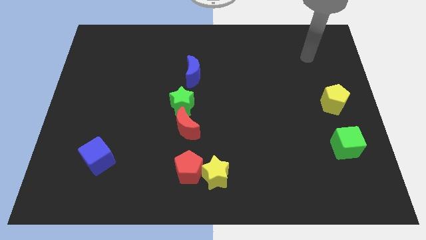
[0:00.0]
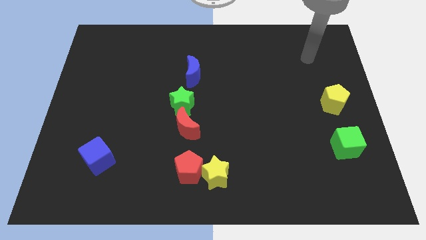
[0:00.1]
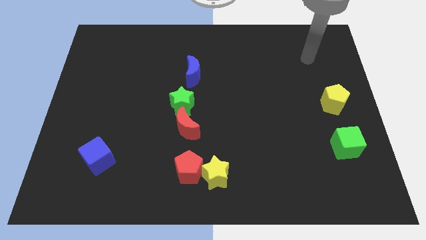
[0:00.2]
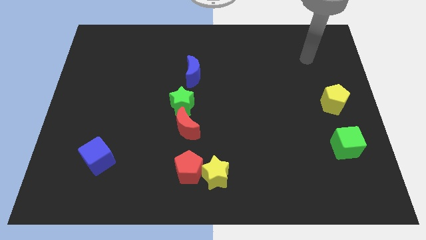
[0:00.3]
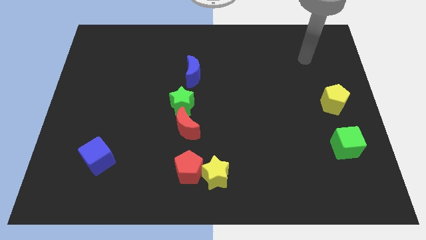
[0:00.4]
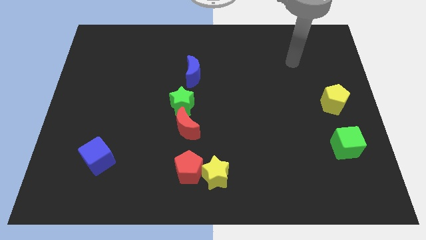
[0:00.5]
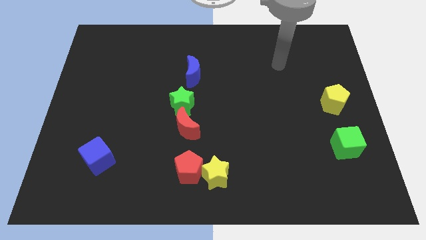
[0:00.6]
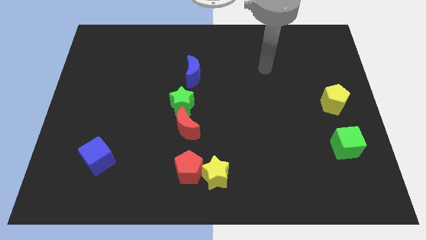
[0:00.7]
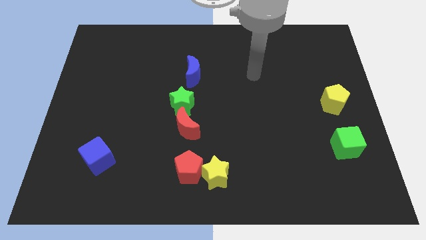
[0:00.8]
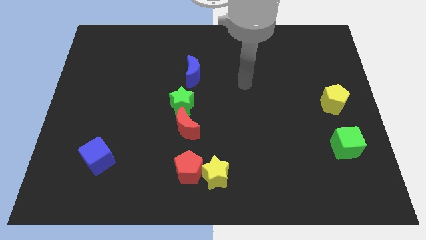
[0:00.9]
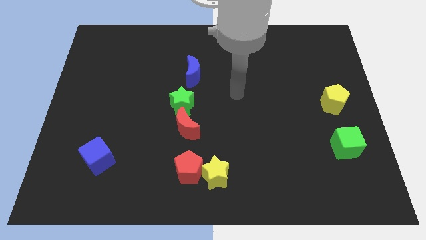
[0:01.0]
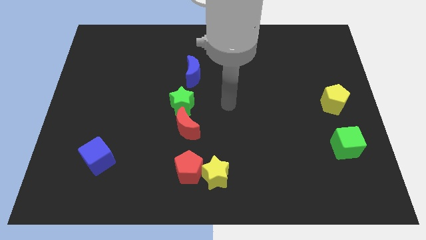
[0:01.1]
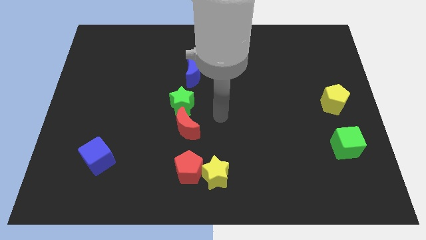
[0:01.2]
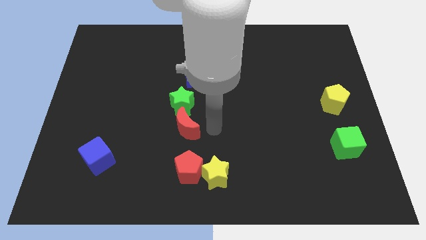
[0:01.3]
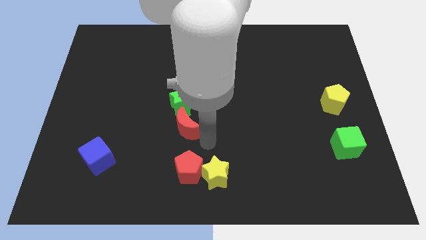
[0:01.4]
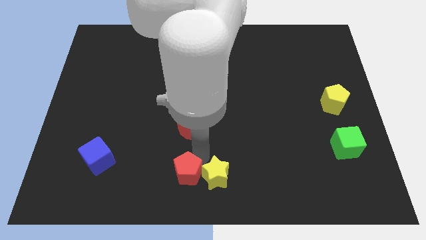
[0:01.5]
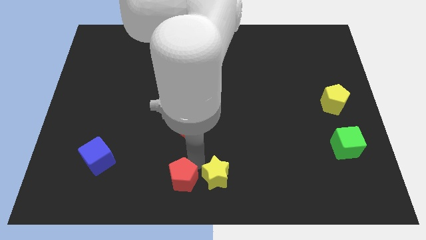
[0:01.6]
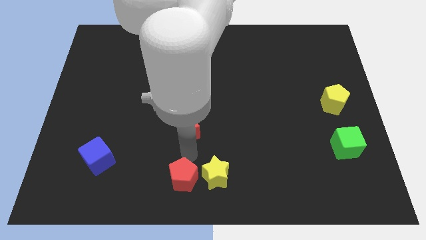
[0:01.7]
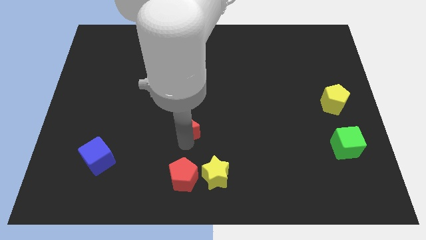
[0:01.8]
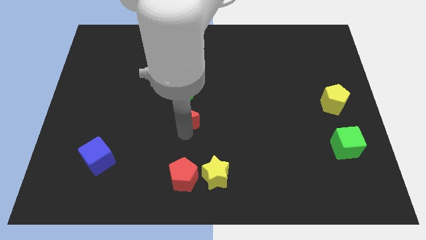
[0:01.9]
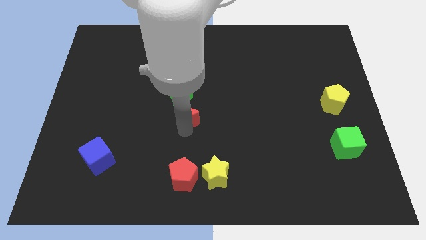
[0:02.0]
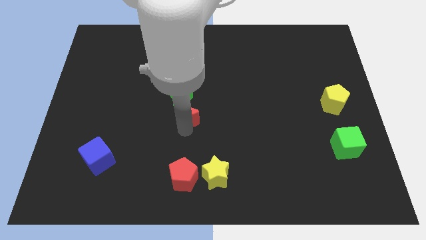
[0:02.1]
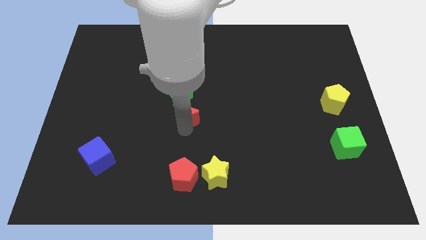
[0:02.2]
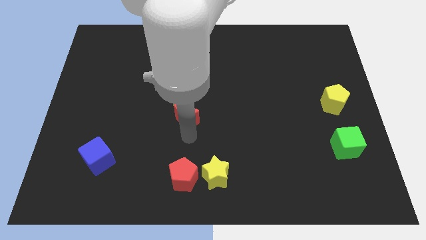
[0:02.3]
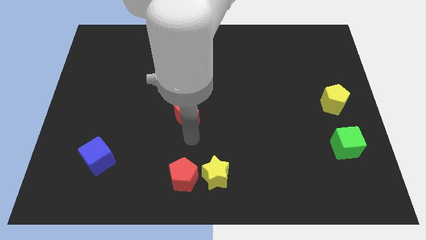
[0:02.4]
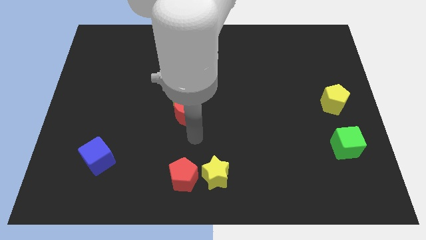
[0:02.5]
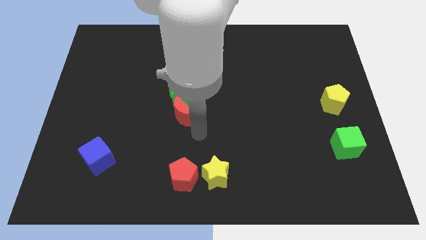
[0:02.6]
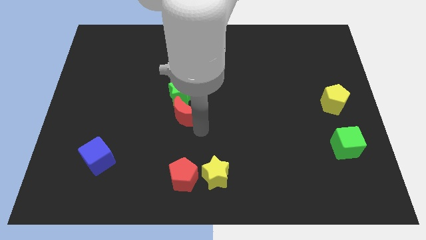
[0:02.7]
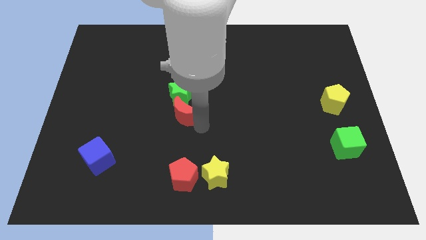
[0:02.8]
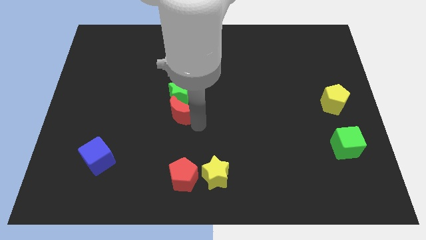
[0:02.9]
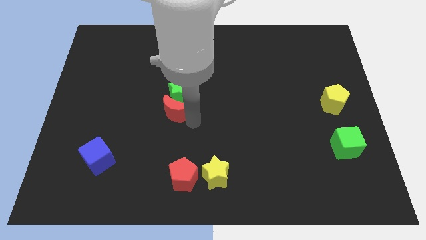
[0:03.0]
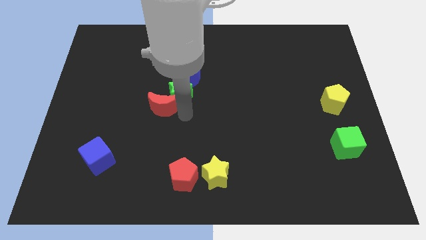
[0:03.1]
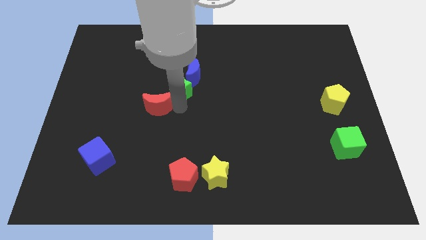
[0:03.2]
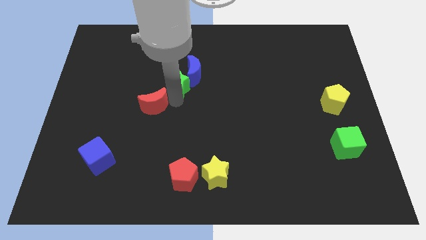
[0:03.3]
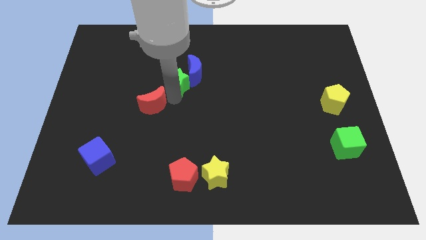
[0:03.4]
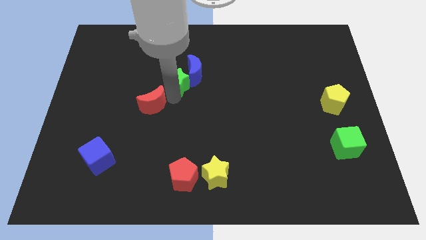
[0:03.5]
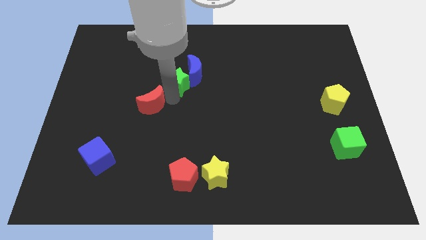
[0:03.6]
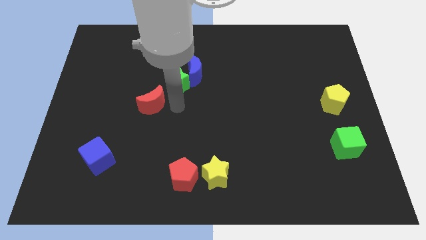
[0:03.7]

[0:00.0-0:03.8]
put the red crescent diagonal to the blue cube

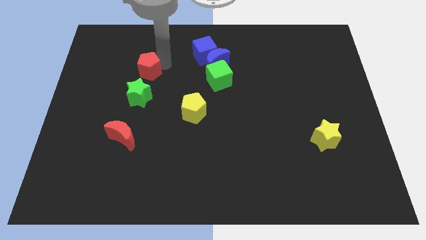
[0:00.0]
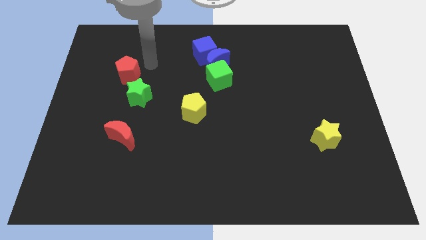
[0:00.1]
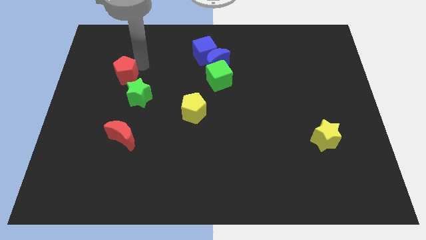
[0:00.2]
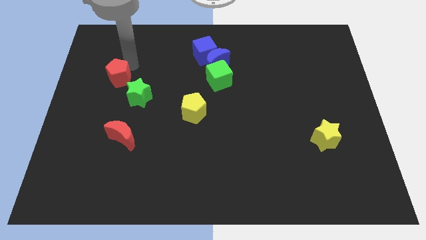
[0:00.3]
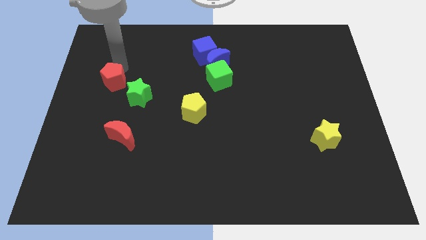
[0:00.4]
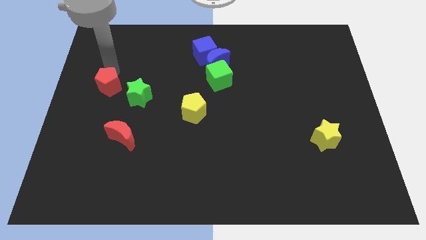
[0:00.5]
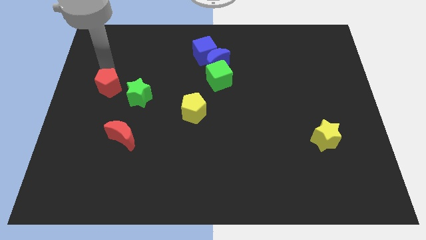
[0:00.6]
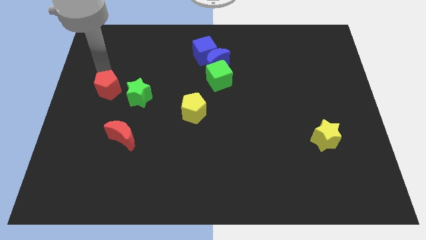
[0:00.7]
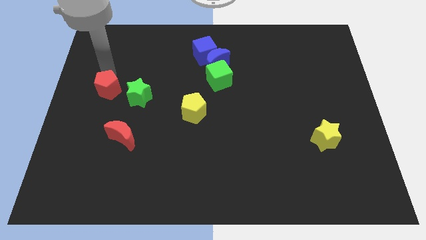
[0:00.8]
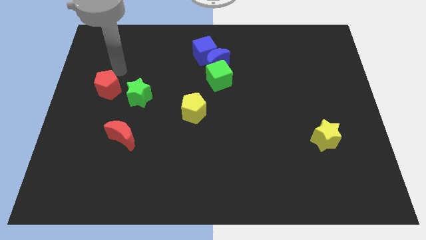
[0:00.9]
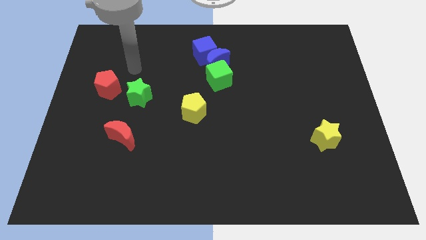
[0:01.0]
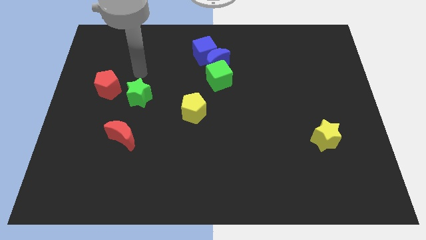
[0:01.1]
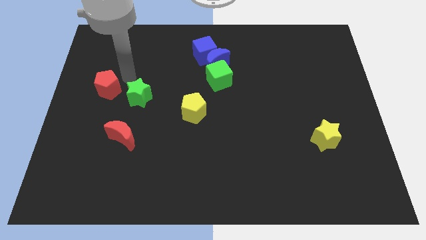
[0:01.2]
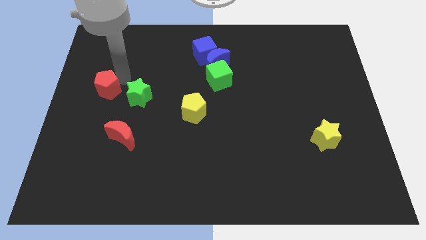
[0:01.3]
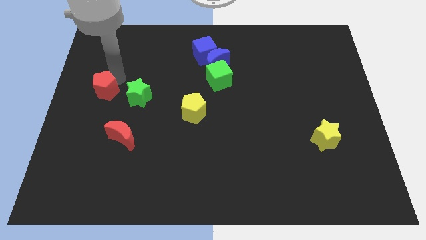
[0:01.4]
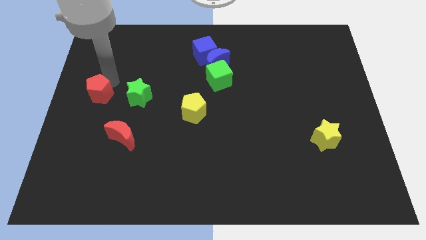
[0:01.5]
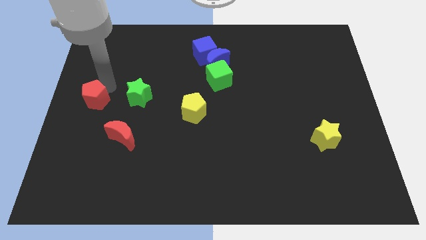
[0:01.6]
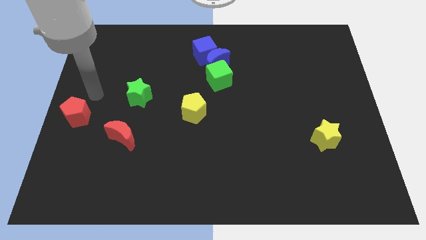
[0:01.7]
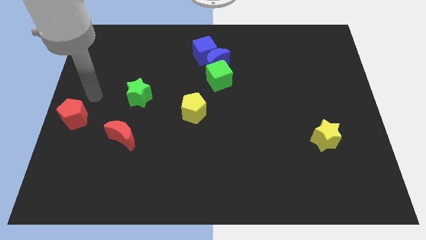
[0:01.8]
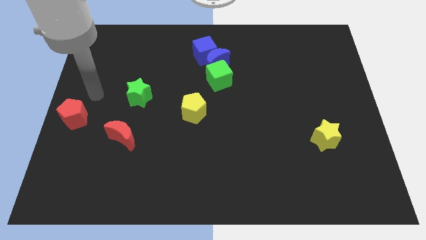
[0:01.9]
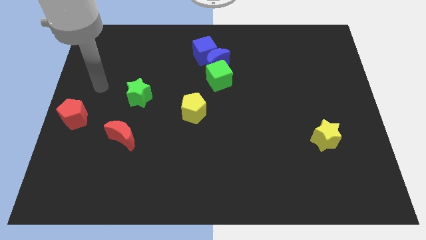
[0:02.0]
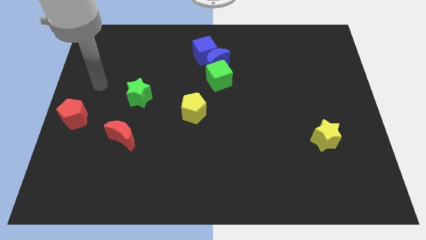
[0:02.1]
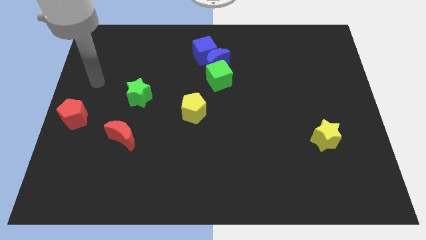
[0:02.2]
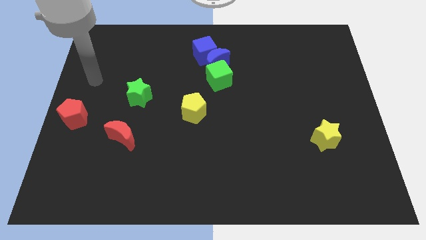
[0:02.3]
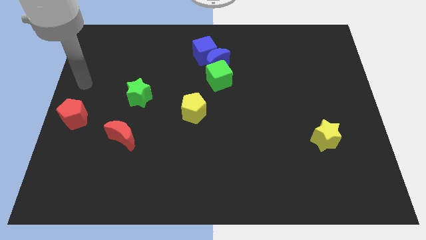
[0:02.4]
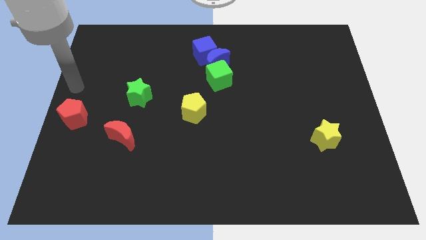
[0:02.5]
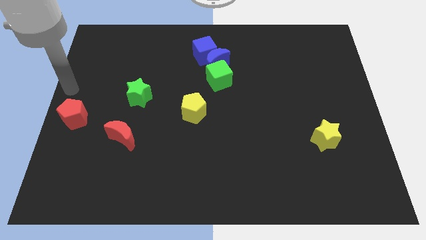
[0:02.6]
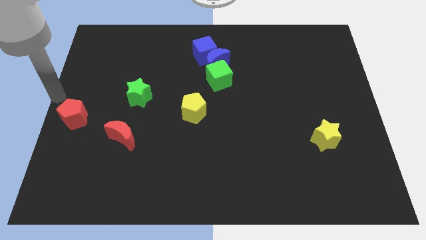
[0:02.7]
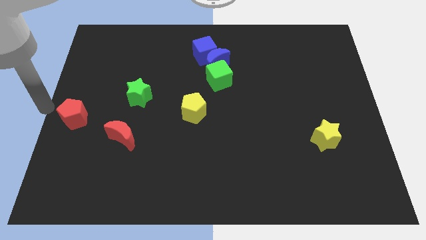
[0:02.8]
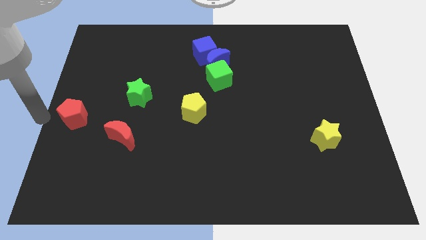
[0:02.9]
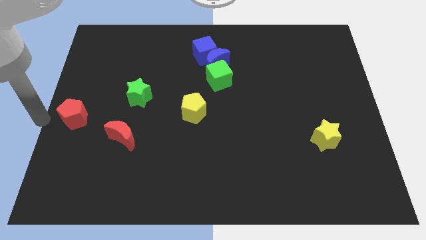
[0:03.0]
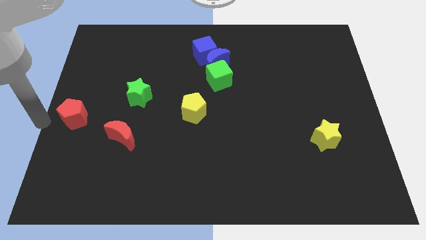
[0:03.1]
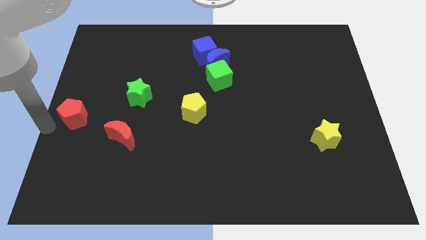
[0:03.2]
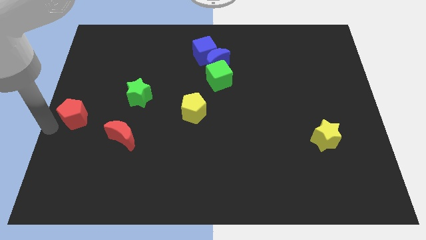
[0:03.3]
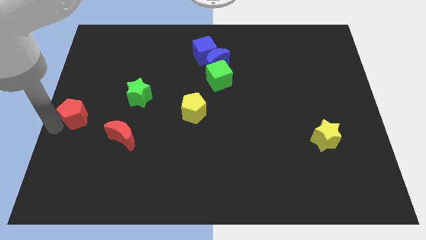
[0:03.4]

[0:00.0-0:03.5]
push the red pentagon to the left of the red crescent

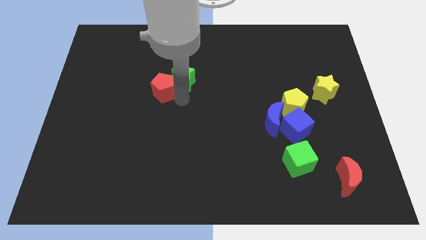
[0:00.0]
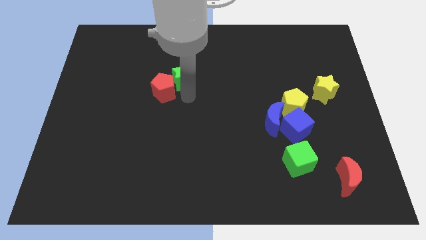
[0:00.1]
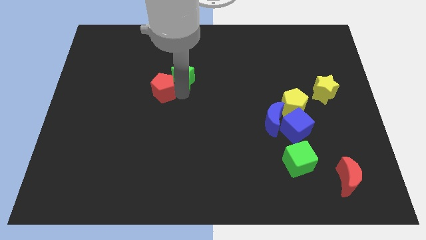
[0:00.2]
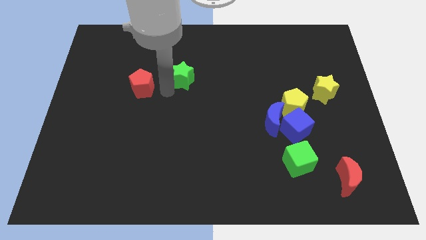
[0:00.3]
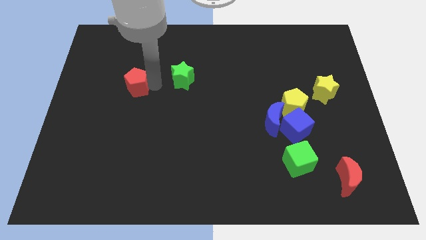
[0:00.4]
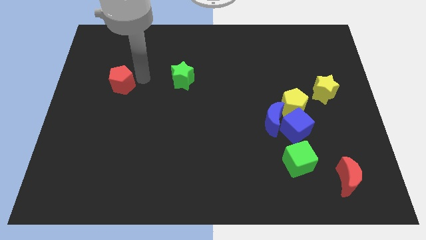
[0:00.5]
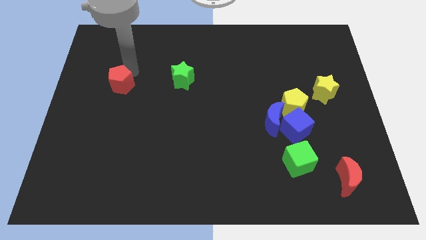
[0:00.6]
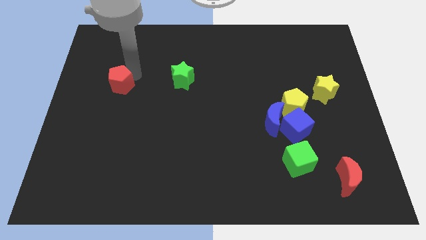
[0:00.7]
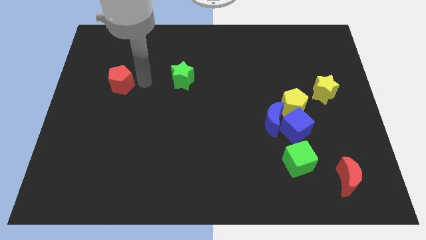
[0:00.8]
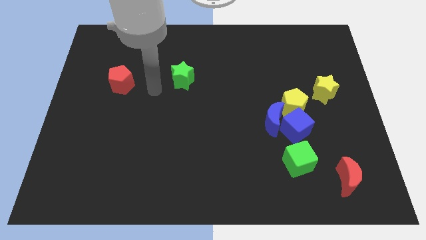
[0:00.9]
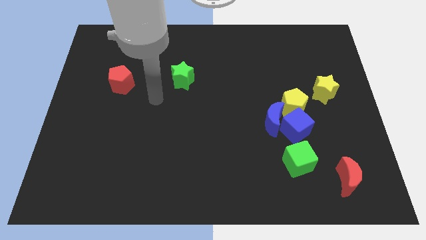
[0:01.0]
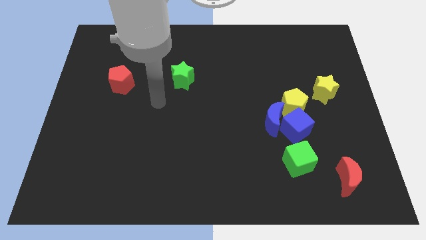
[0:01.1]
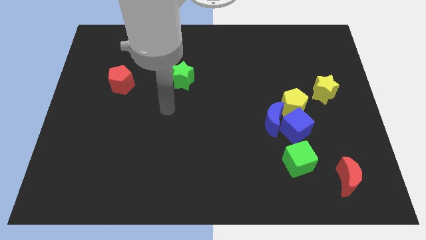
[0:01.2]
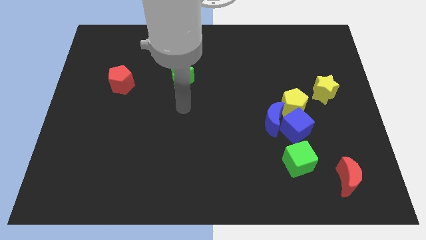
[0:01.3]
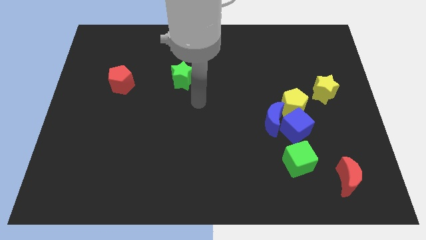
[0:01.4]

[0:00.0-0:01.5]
separate the red pentagon from the green star
